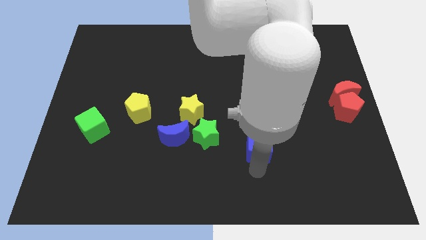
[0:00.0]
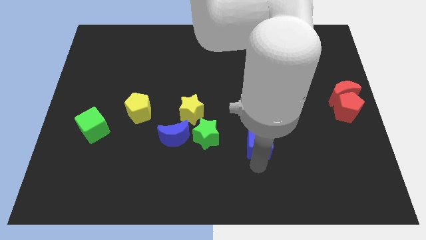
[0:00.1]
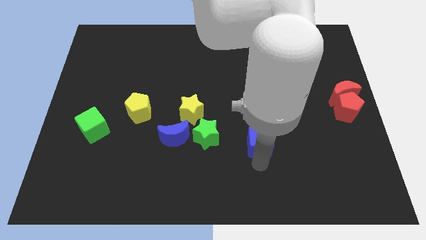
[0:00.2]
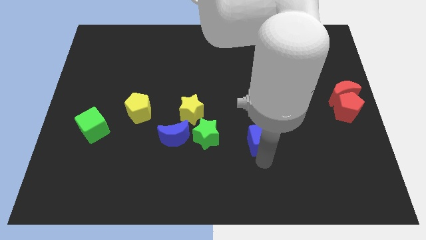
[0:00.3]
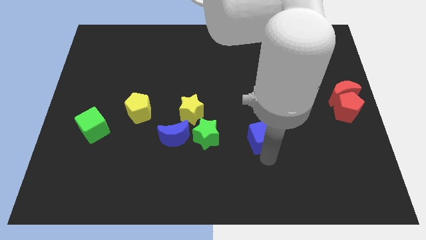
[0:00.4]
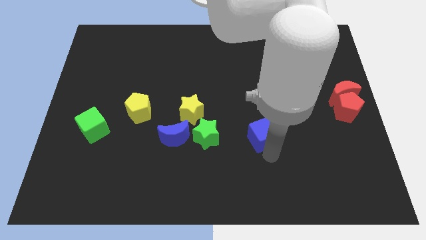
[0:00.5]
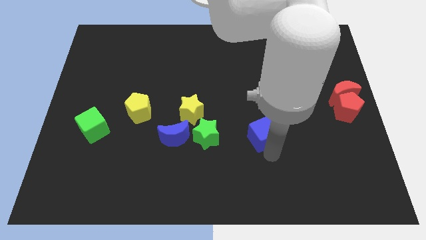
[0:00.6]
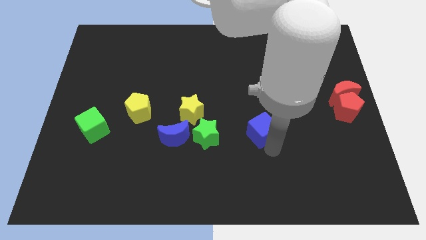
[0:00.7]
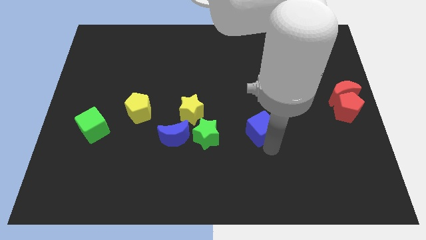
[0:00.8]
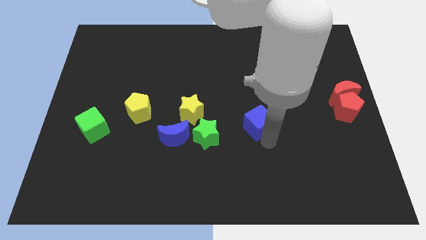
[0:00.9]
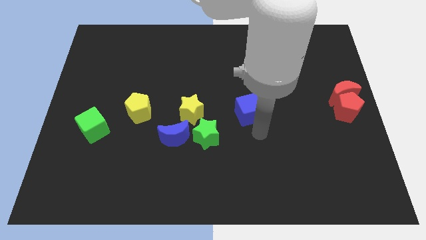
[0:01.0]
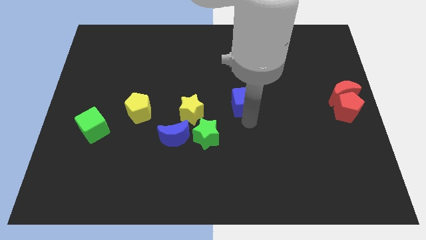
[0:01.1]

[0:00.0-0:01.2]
move the blue cube to the right of the yellow star

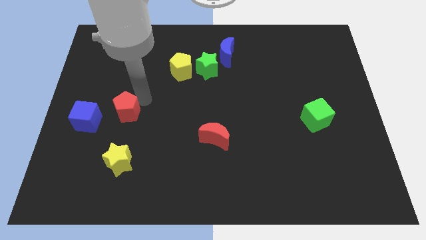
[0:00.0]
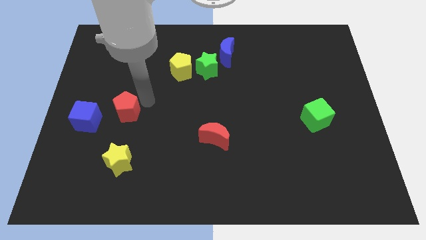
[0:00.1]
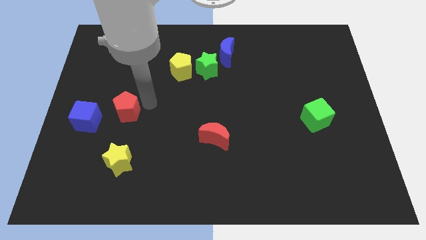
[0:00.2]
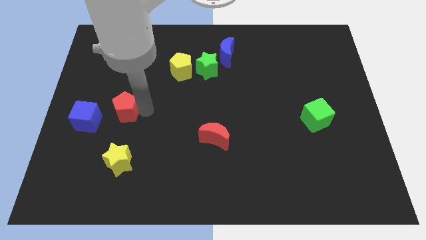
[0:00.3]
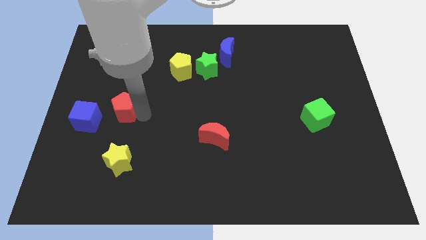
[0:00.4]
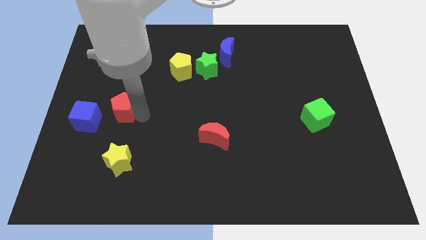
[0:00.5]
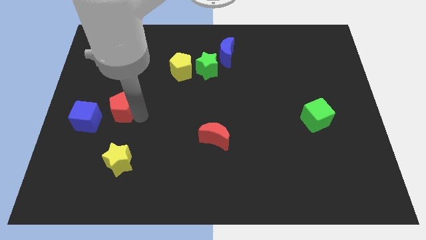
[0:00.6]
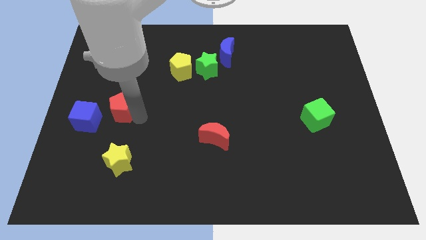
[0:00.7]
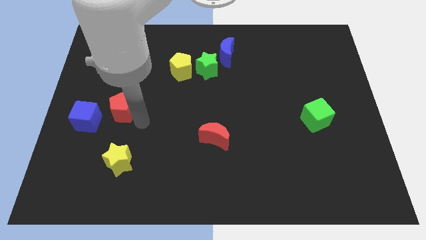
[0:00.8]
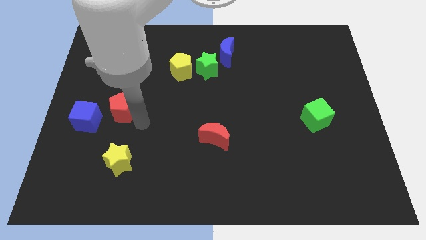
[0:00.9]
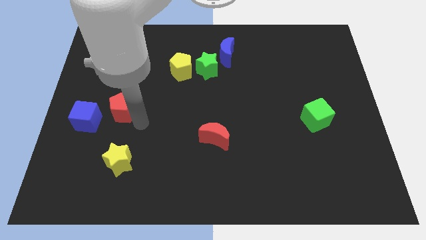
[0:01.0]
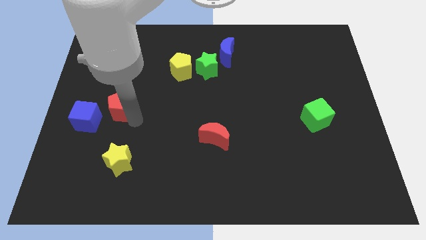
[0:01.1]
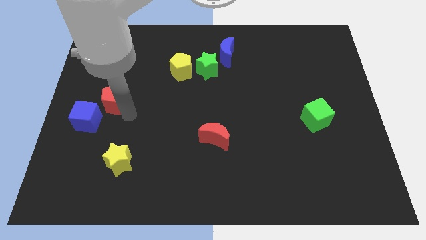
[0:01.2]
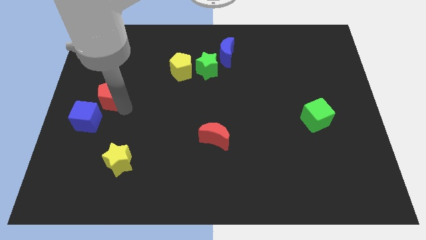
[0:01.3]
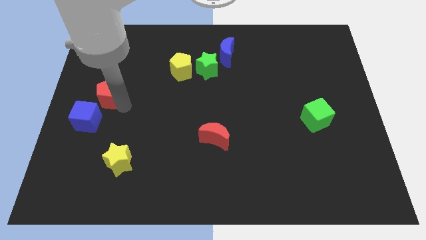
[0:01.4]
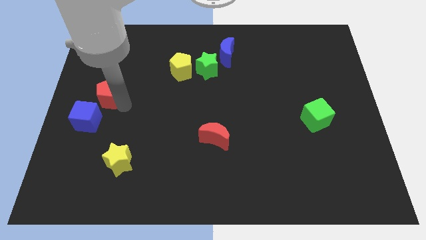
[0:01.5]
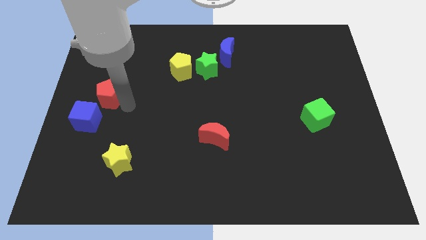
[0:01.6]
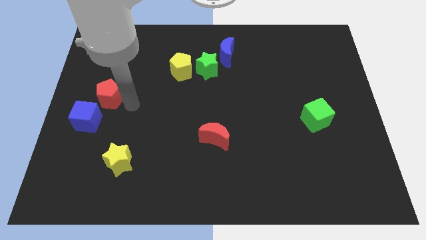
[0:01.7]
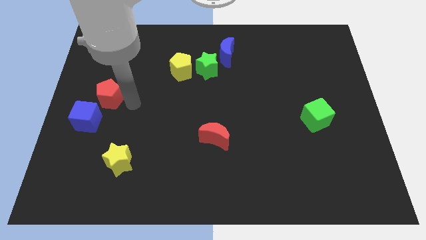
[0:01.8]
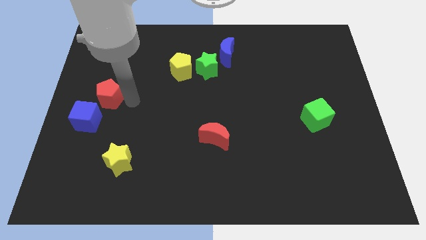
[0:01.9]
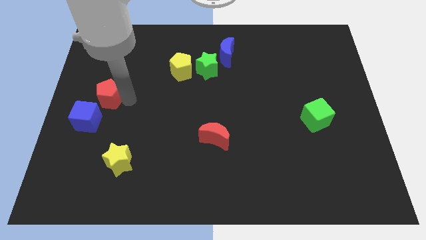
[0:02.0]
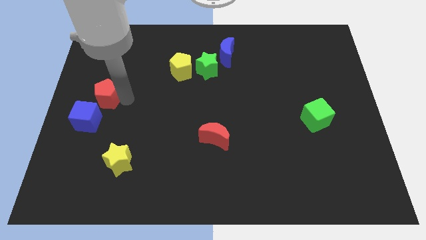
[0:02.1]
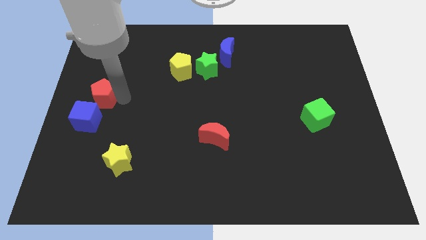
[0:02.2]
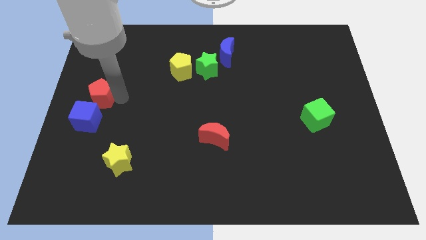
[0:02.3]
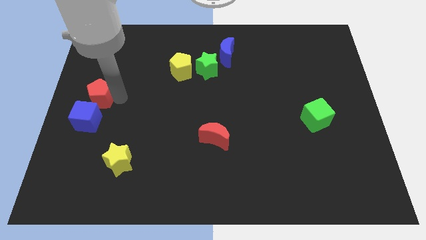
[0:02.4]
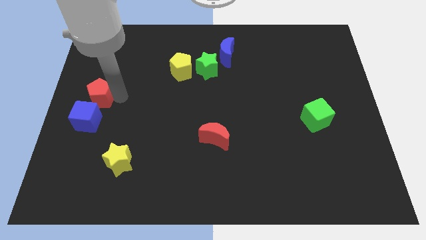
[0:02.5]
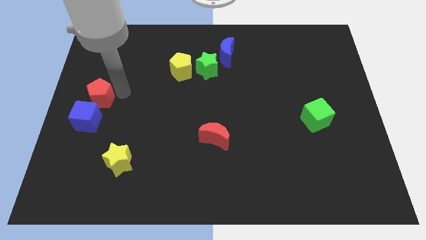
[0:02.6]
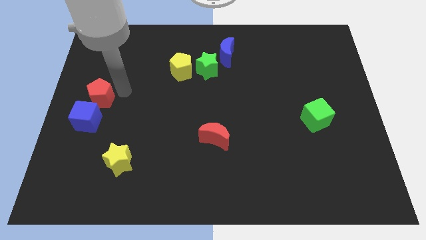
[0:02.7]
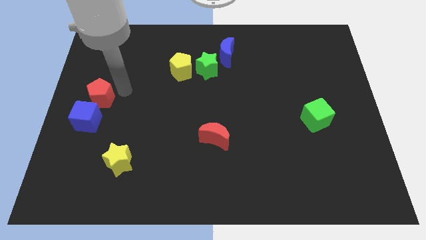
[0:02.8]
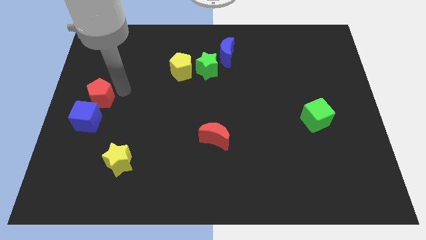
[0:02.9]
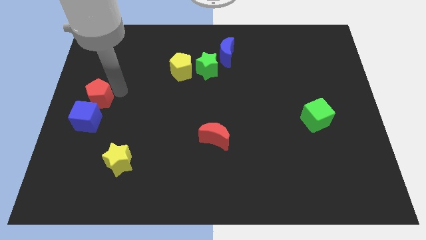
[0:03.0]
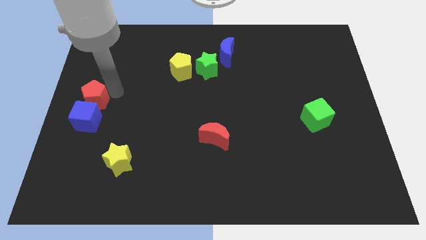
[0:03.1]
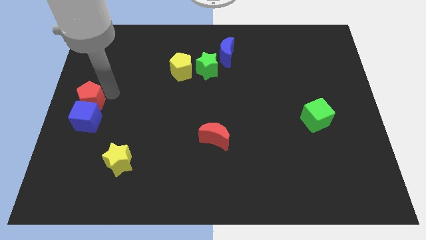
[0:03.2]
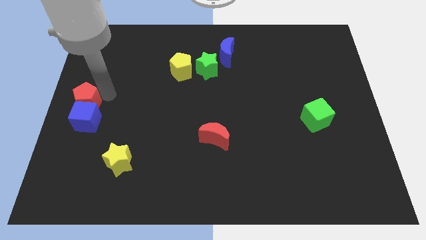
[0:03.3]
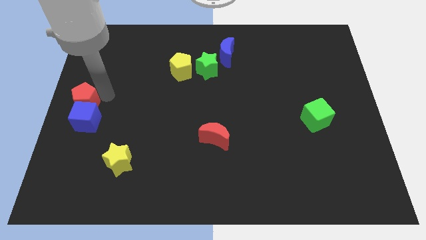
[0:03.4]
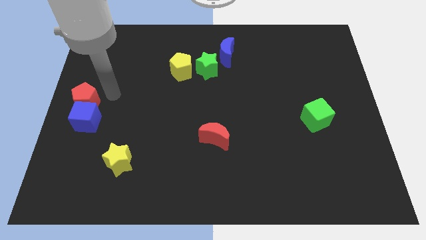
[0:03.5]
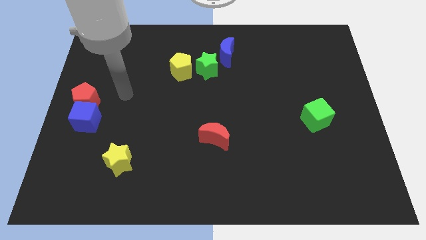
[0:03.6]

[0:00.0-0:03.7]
push the red pentagon into blue cube

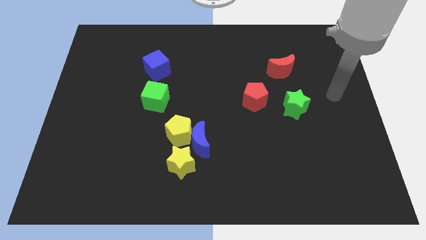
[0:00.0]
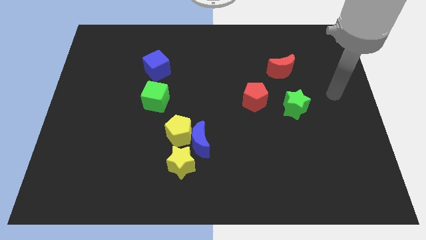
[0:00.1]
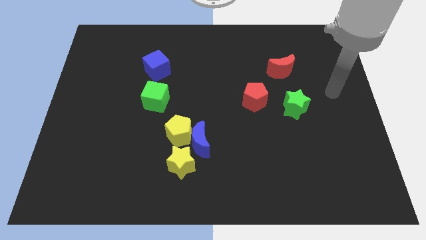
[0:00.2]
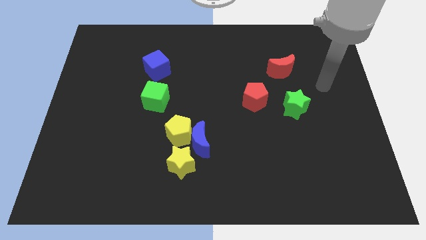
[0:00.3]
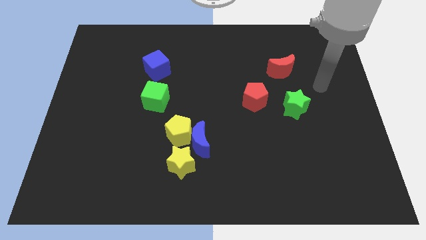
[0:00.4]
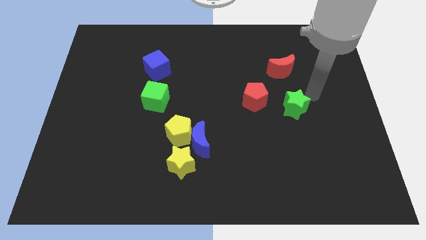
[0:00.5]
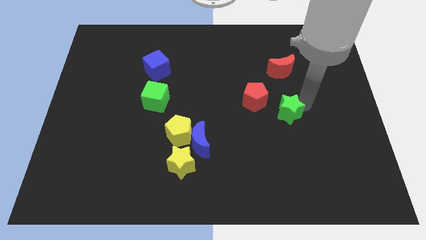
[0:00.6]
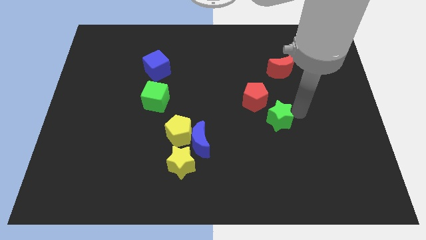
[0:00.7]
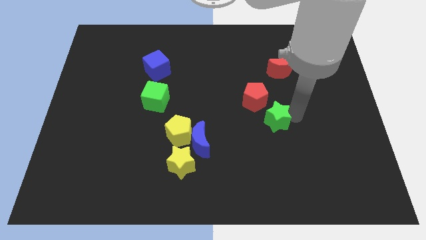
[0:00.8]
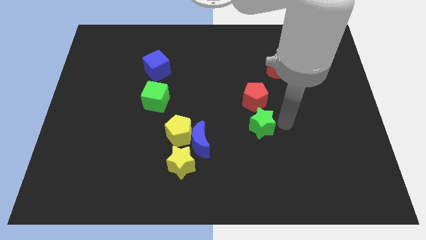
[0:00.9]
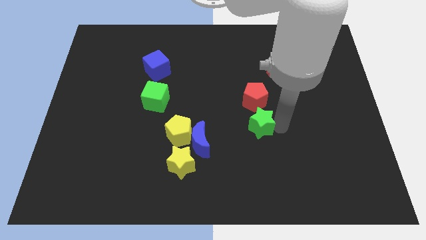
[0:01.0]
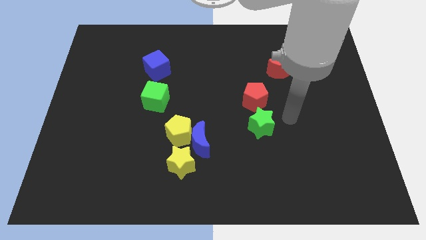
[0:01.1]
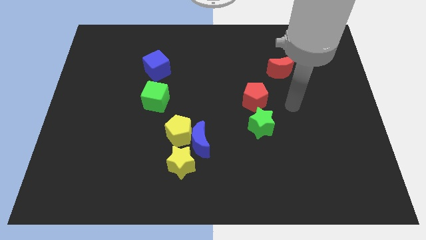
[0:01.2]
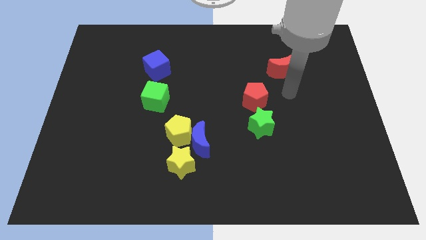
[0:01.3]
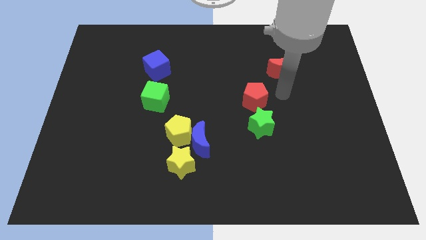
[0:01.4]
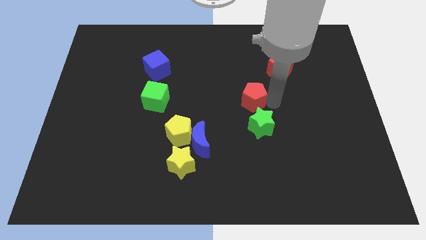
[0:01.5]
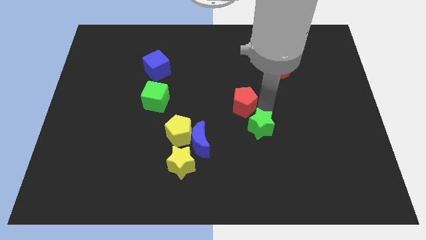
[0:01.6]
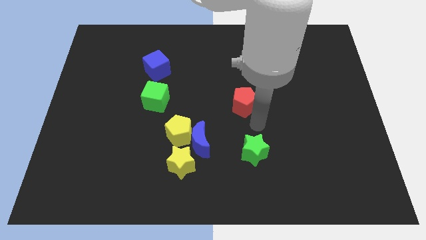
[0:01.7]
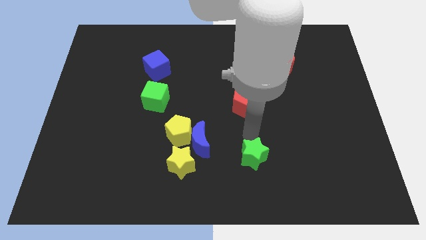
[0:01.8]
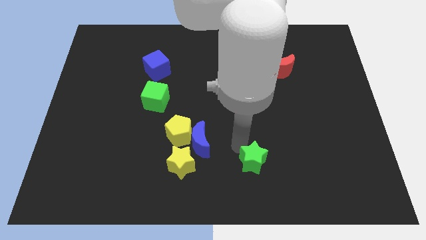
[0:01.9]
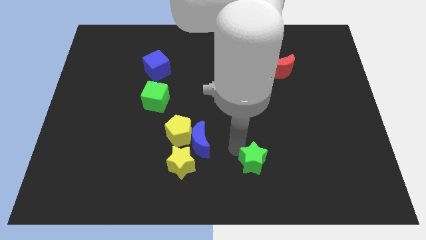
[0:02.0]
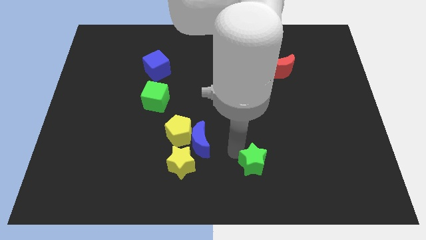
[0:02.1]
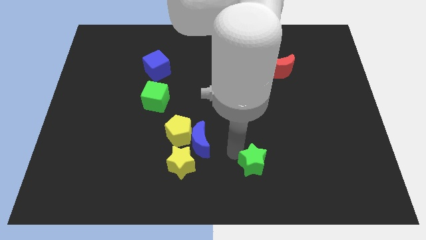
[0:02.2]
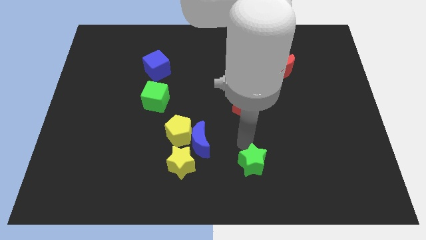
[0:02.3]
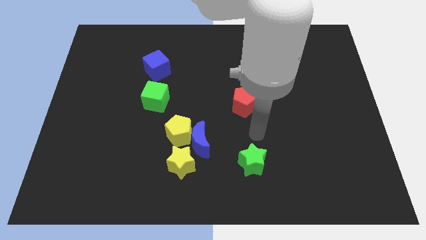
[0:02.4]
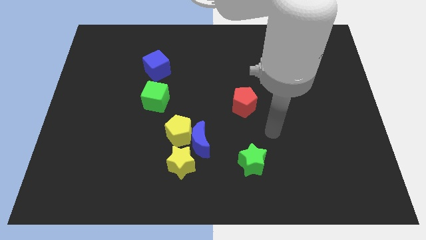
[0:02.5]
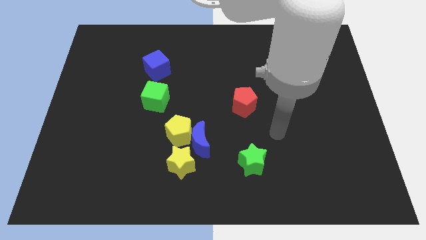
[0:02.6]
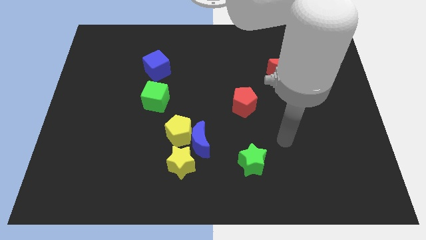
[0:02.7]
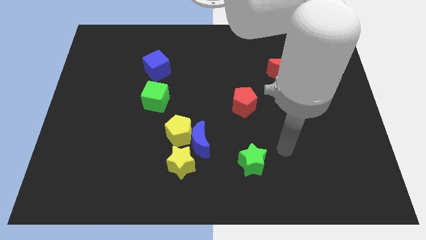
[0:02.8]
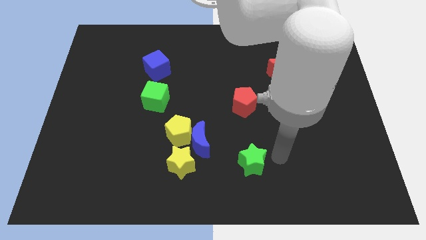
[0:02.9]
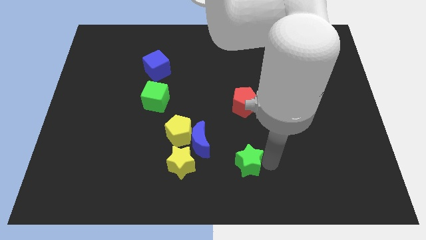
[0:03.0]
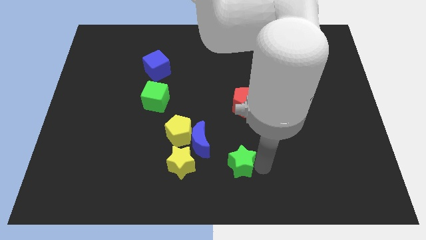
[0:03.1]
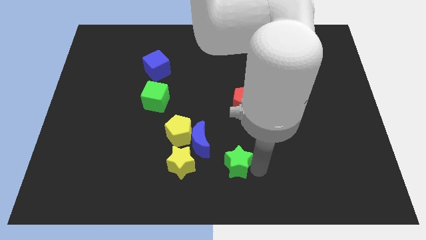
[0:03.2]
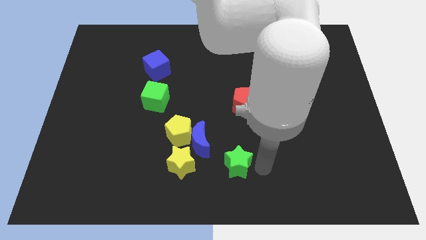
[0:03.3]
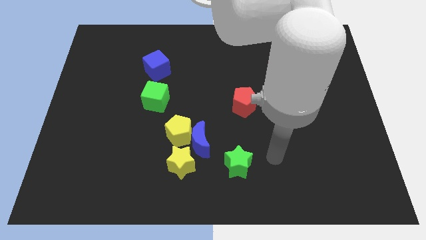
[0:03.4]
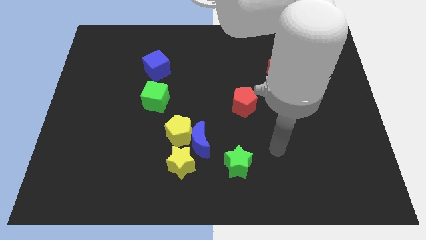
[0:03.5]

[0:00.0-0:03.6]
place the green star to the right of the yellow star

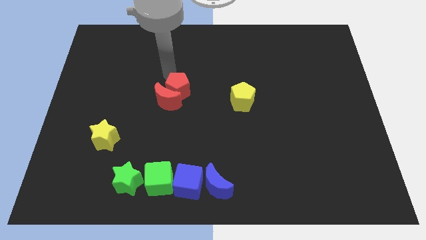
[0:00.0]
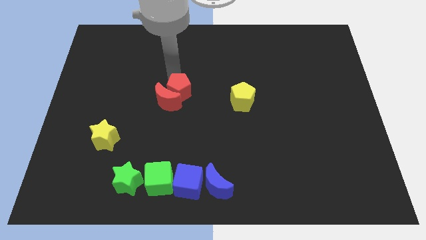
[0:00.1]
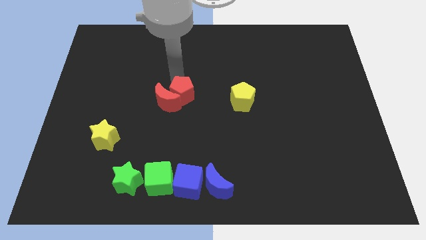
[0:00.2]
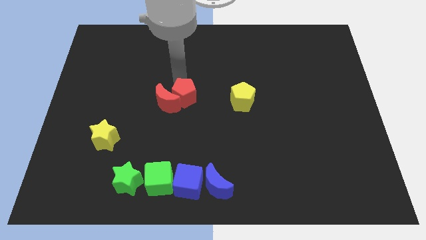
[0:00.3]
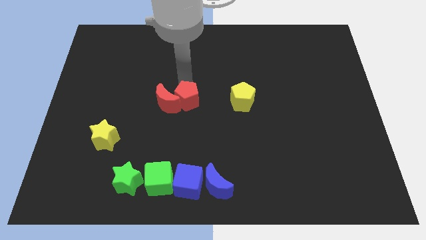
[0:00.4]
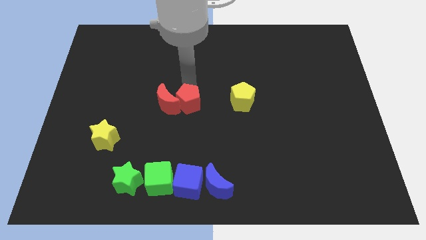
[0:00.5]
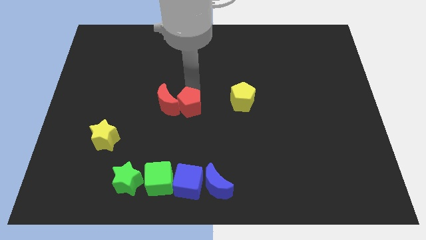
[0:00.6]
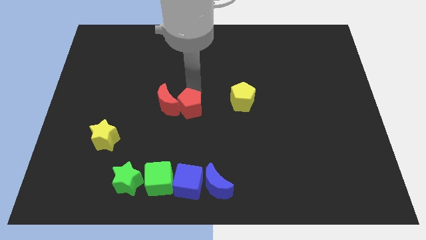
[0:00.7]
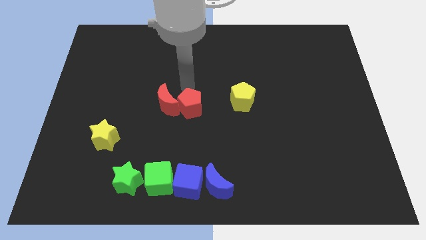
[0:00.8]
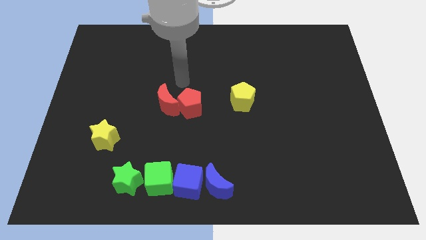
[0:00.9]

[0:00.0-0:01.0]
place the red pentagon above the blue cube
